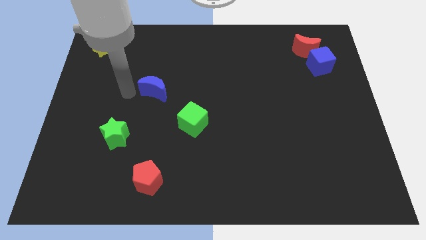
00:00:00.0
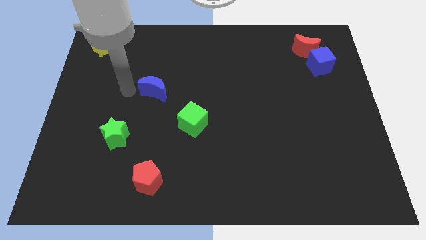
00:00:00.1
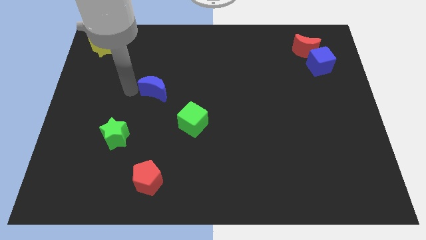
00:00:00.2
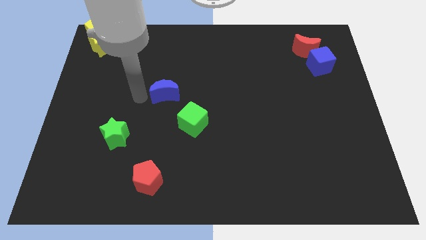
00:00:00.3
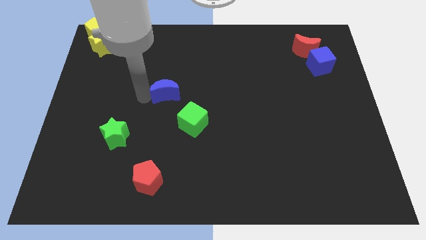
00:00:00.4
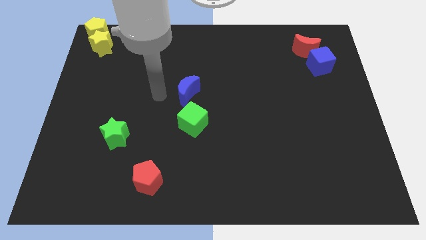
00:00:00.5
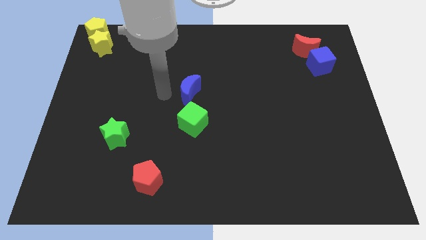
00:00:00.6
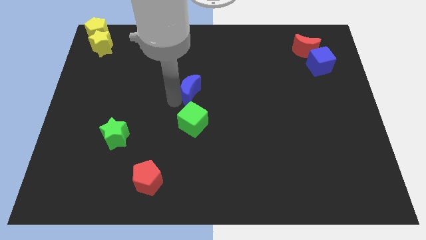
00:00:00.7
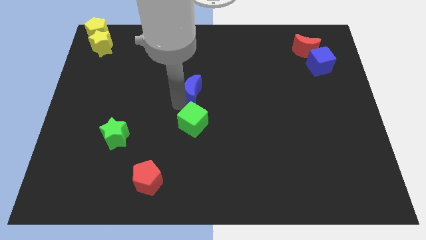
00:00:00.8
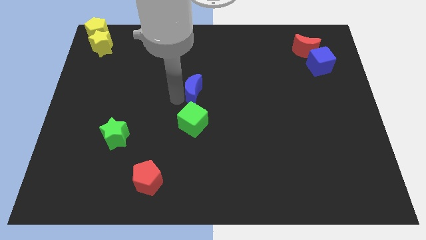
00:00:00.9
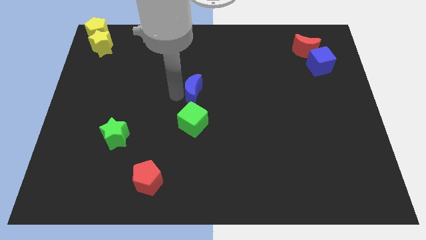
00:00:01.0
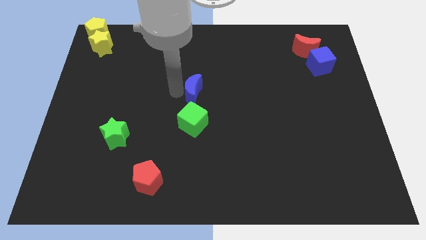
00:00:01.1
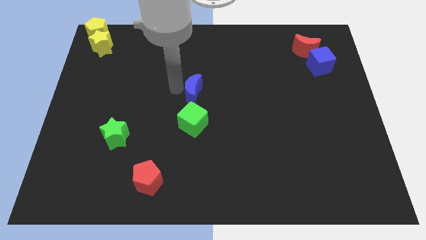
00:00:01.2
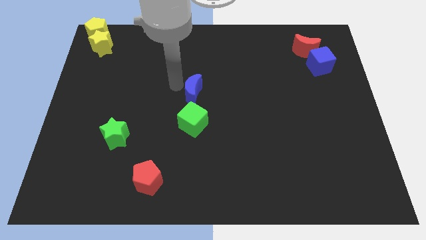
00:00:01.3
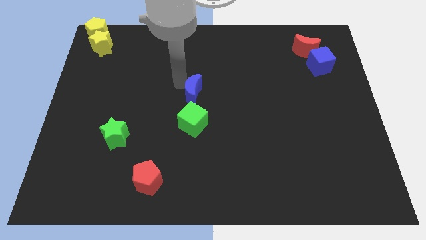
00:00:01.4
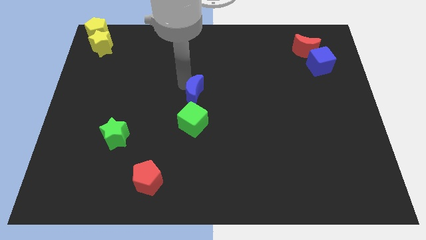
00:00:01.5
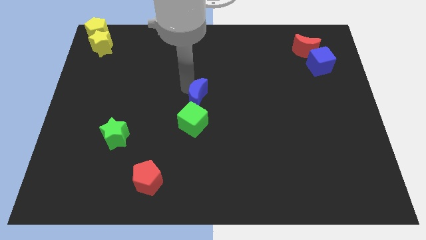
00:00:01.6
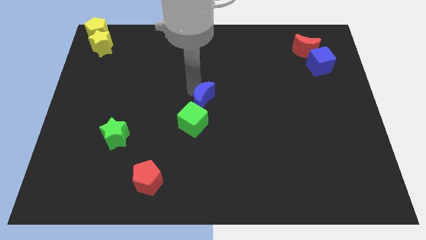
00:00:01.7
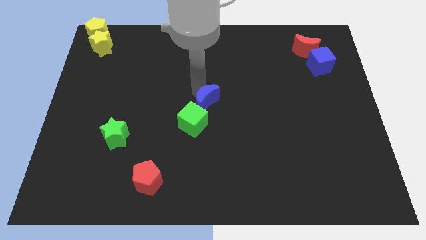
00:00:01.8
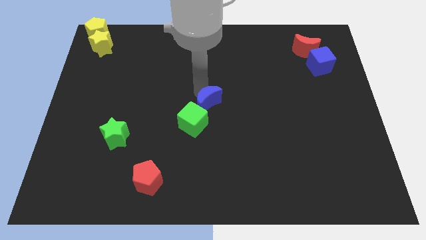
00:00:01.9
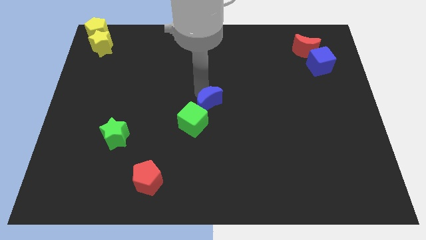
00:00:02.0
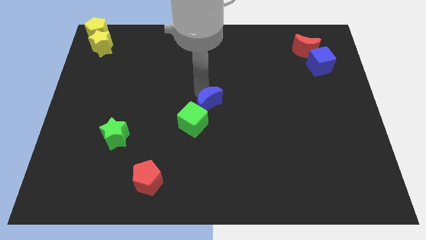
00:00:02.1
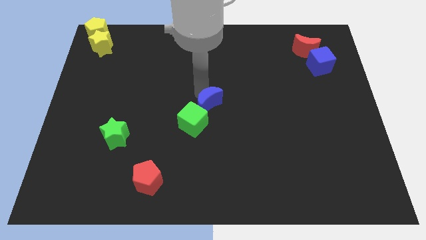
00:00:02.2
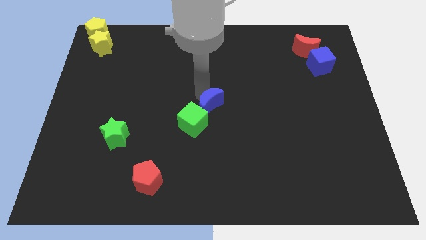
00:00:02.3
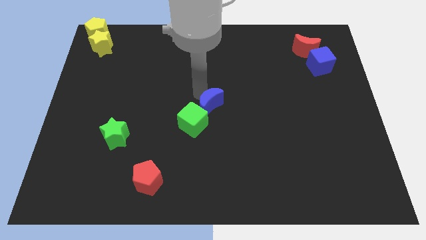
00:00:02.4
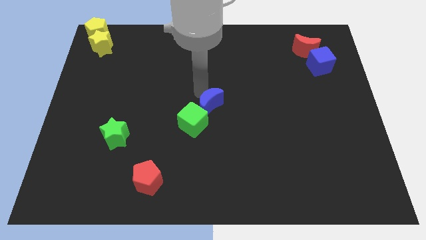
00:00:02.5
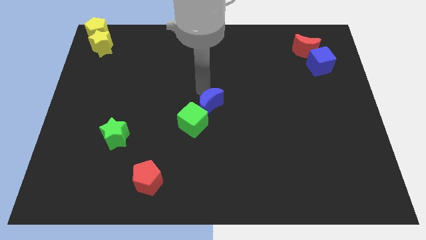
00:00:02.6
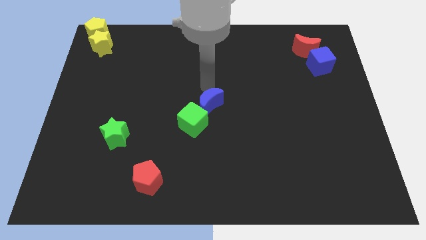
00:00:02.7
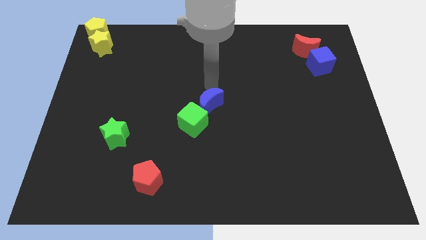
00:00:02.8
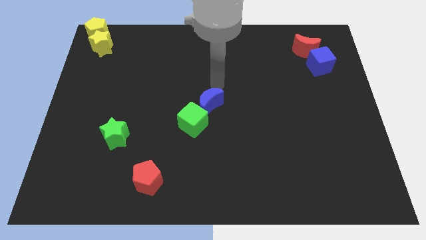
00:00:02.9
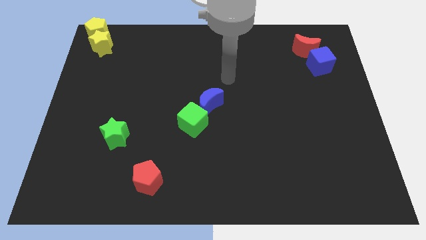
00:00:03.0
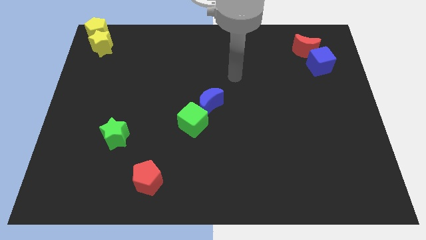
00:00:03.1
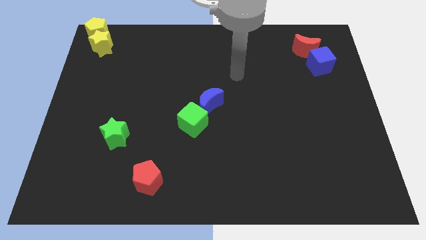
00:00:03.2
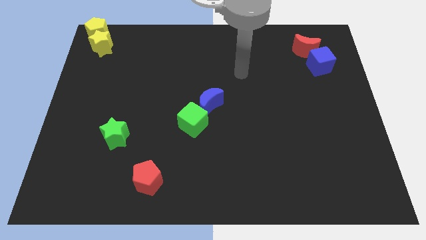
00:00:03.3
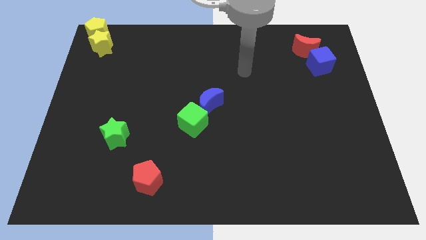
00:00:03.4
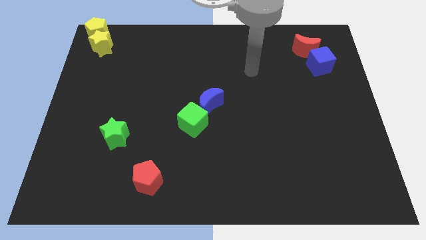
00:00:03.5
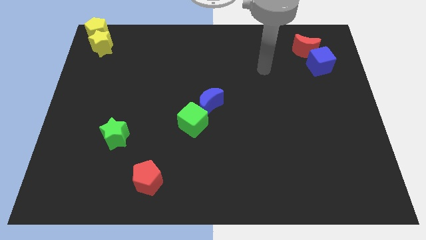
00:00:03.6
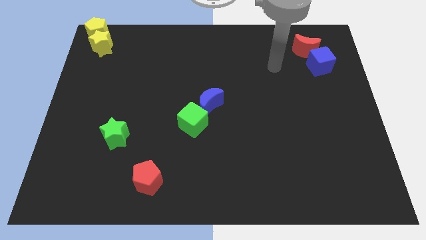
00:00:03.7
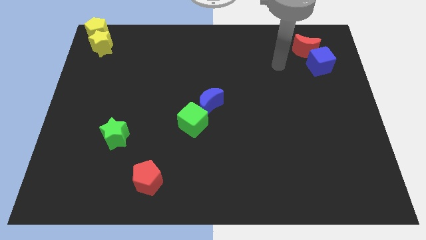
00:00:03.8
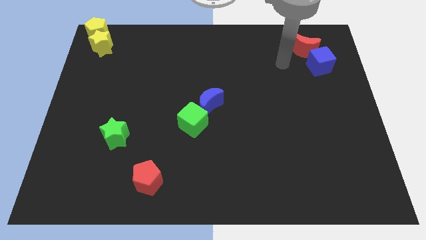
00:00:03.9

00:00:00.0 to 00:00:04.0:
move blue moon diagonally above green cube

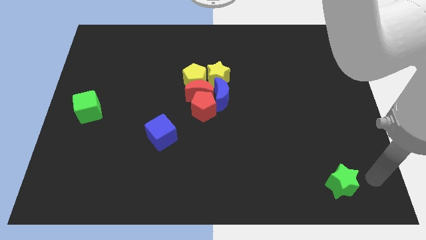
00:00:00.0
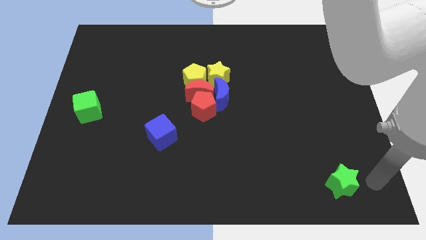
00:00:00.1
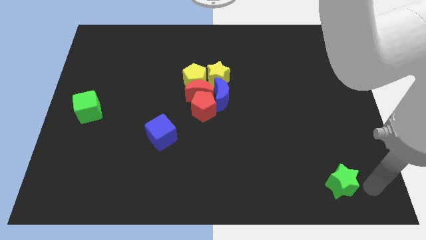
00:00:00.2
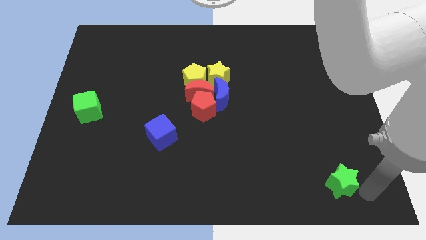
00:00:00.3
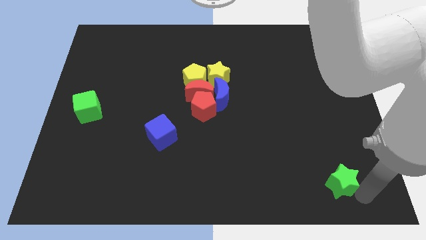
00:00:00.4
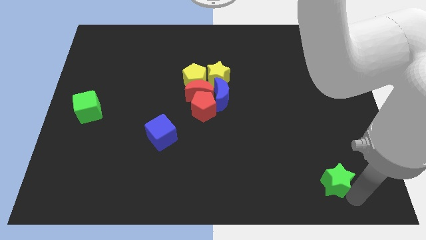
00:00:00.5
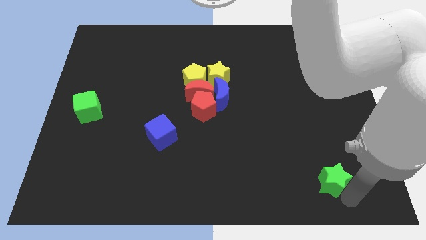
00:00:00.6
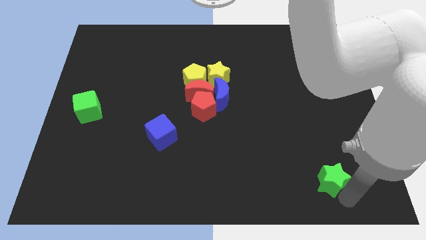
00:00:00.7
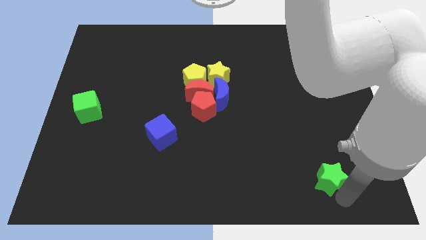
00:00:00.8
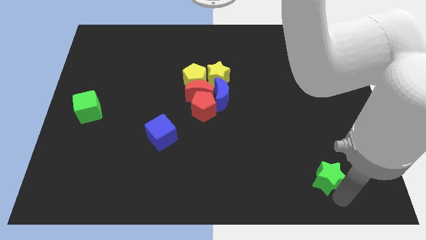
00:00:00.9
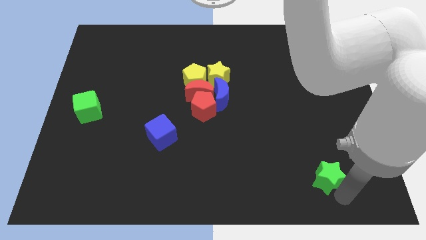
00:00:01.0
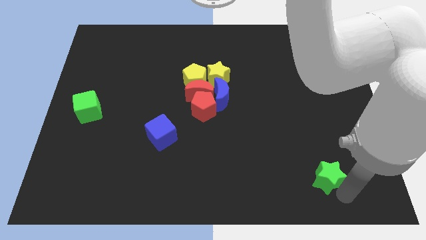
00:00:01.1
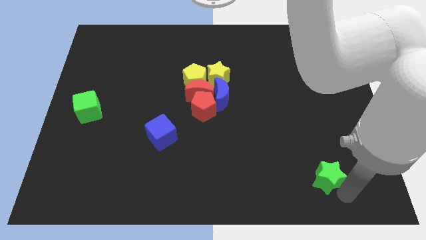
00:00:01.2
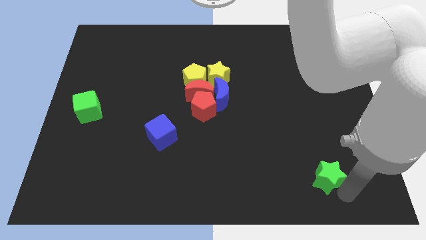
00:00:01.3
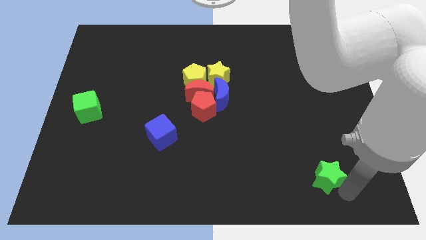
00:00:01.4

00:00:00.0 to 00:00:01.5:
push the green star slightly to the upwards

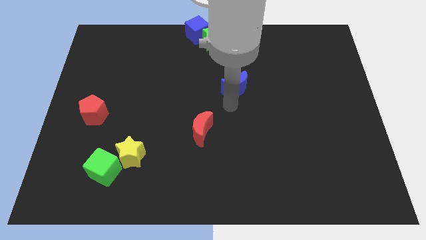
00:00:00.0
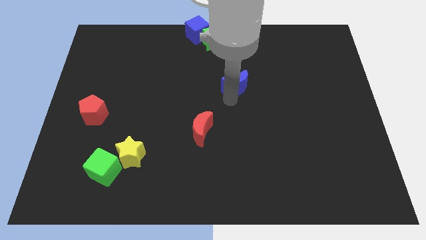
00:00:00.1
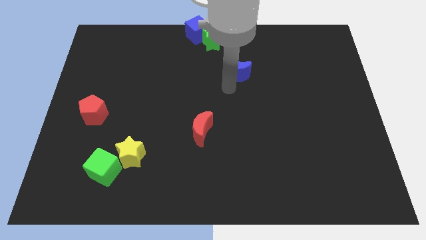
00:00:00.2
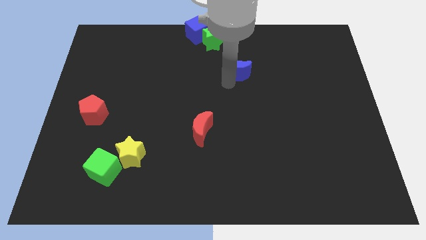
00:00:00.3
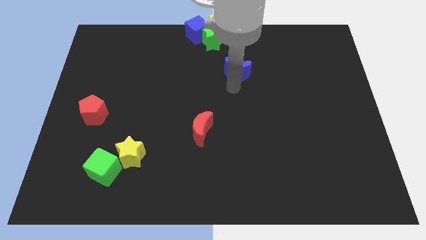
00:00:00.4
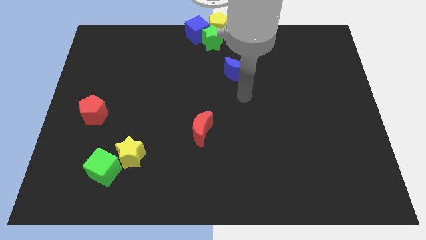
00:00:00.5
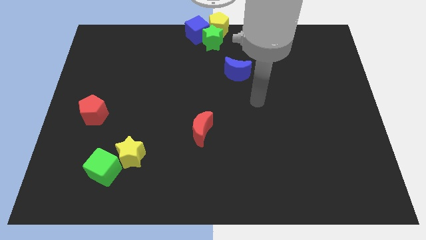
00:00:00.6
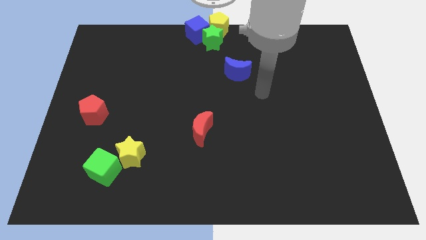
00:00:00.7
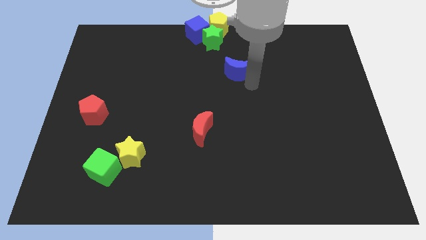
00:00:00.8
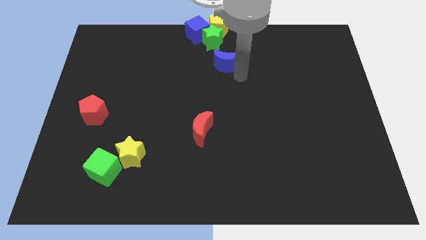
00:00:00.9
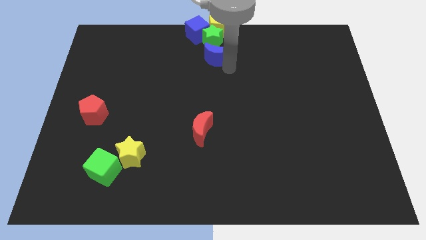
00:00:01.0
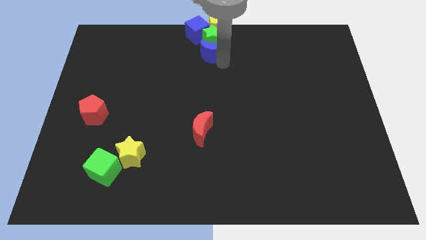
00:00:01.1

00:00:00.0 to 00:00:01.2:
place blue moon to the bottom of green star

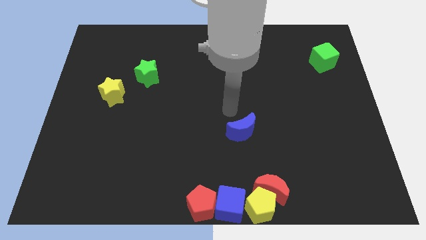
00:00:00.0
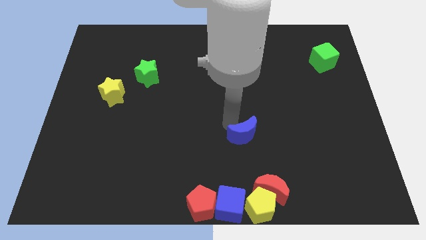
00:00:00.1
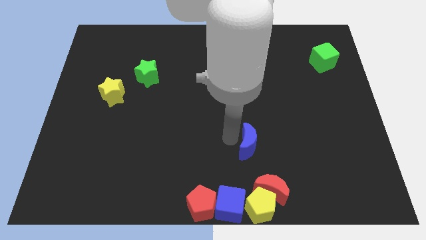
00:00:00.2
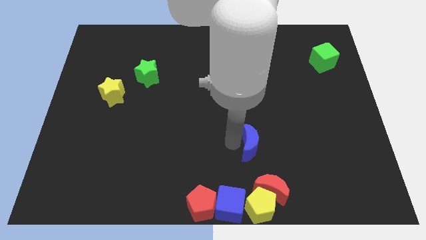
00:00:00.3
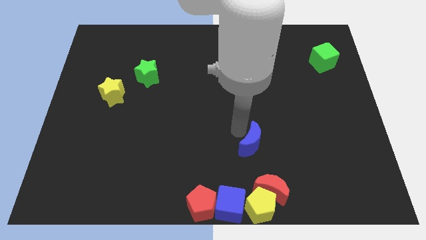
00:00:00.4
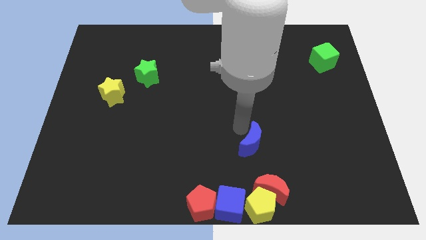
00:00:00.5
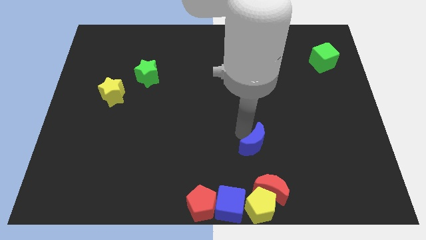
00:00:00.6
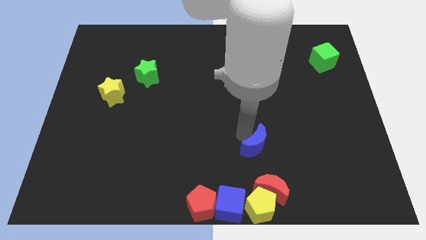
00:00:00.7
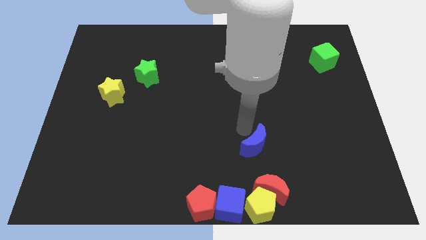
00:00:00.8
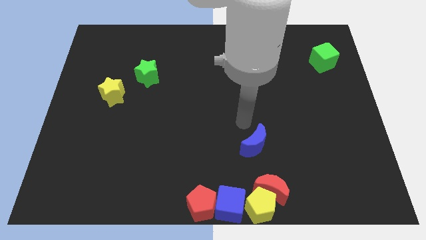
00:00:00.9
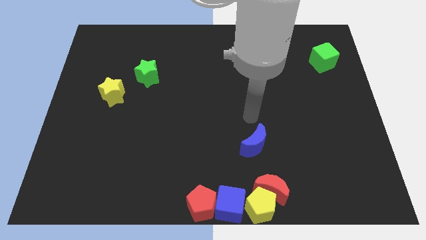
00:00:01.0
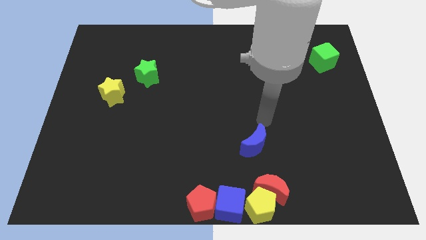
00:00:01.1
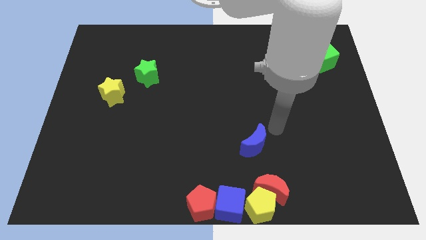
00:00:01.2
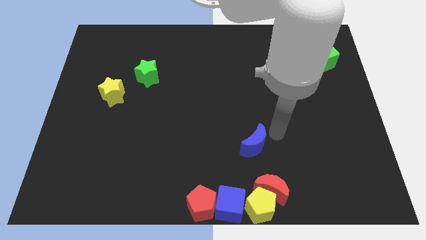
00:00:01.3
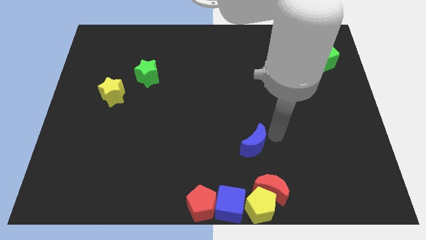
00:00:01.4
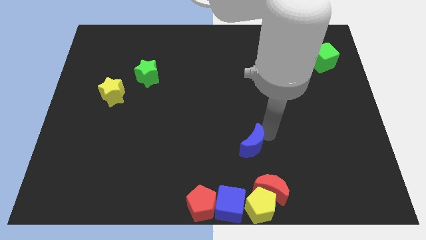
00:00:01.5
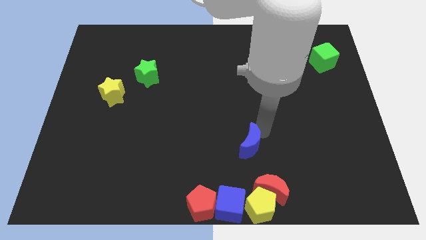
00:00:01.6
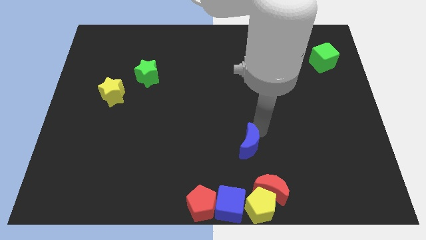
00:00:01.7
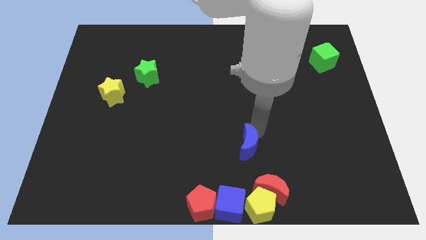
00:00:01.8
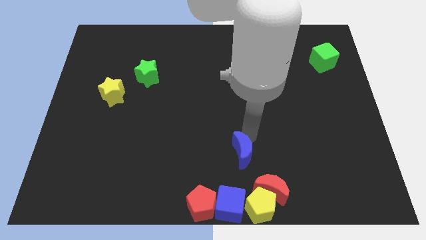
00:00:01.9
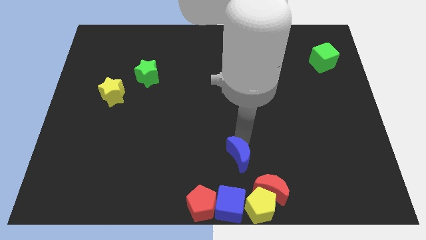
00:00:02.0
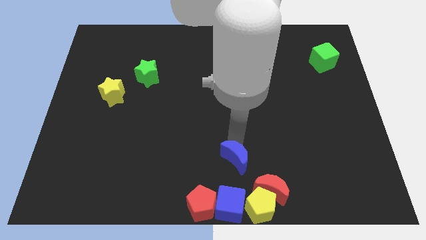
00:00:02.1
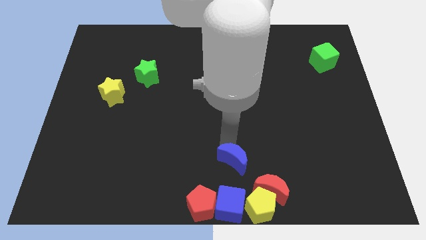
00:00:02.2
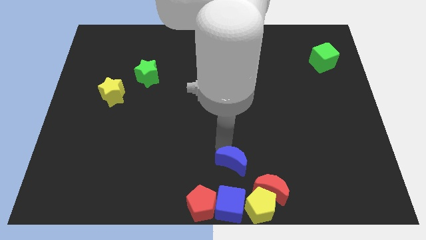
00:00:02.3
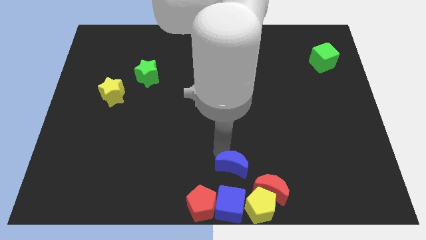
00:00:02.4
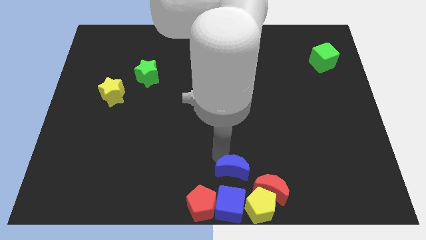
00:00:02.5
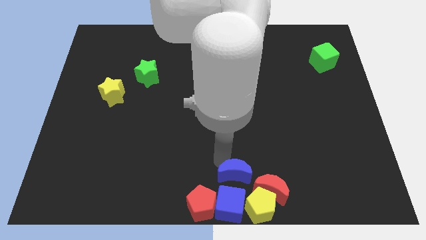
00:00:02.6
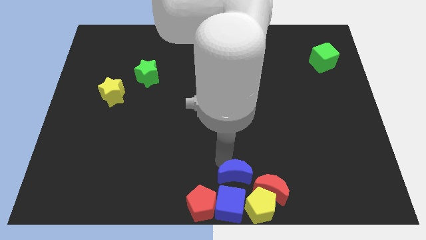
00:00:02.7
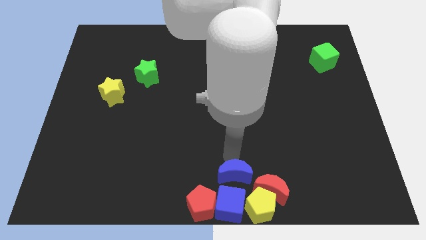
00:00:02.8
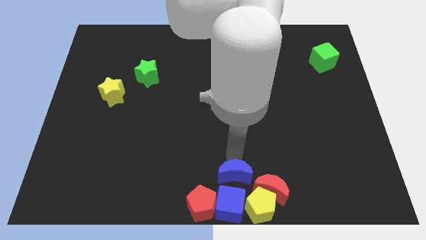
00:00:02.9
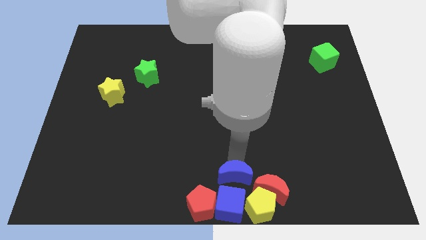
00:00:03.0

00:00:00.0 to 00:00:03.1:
push the blue moon vertically above the blue cube
